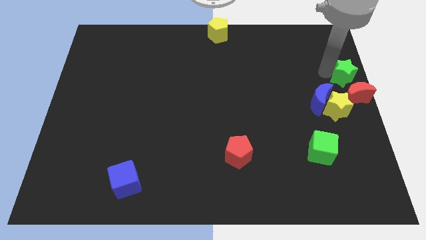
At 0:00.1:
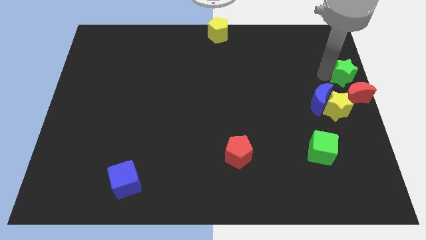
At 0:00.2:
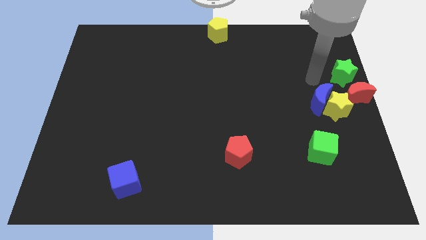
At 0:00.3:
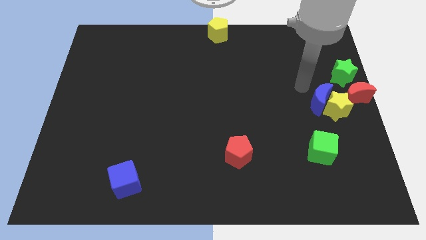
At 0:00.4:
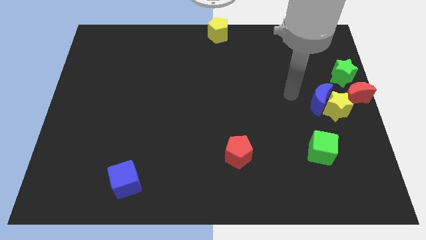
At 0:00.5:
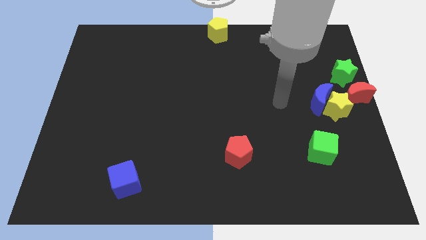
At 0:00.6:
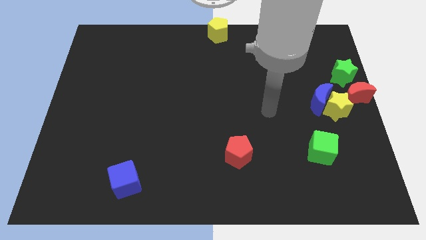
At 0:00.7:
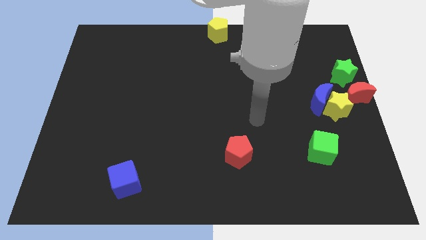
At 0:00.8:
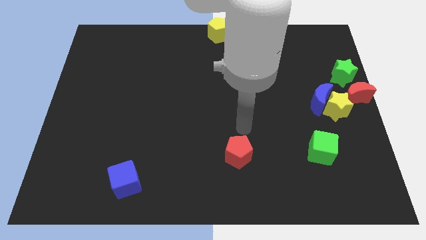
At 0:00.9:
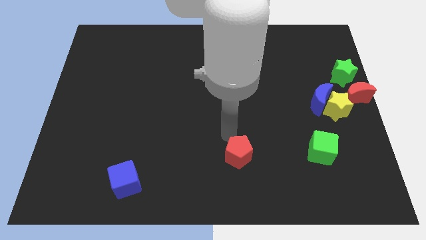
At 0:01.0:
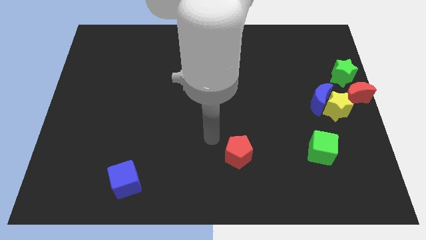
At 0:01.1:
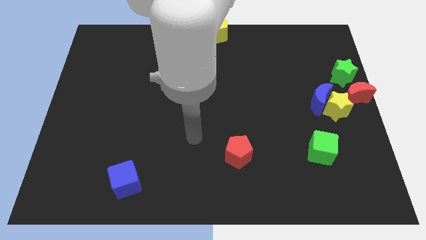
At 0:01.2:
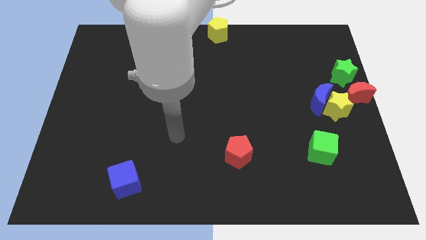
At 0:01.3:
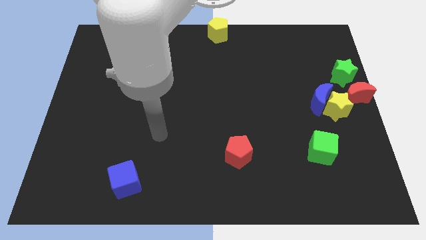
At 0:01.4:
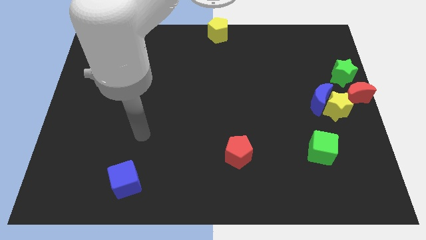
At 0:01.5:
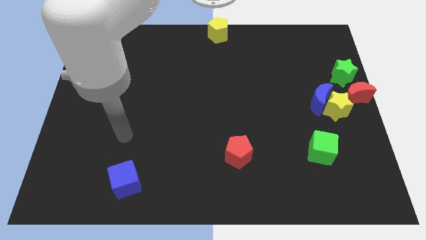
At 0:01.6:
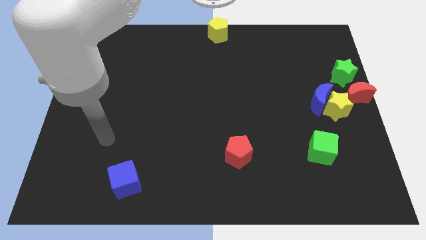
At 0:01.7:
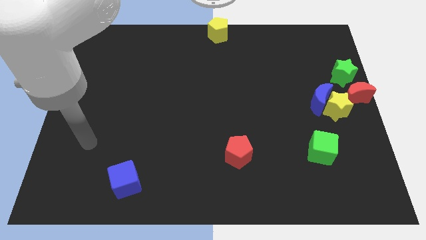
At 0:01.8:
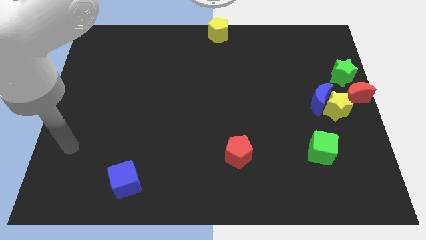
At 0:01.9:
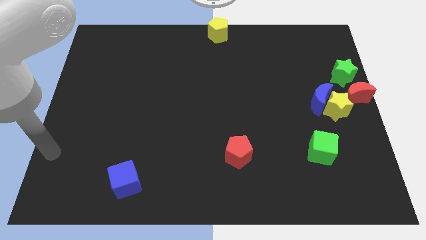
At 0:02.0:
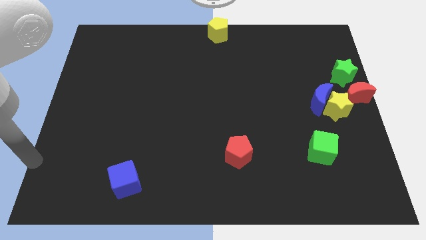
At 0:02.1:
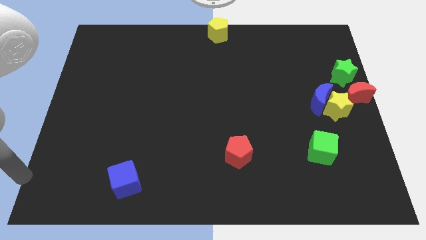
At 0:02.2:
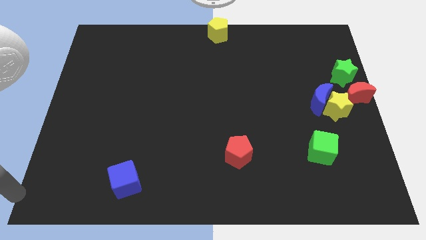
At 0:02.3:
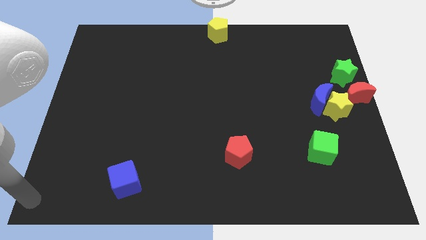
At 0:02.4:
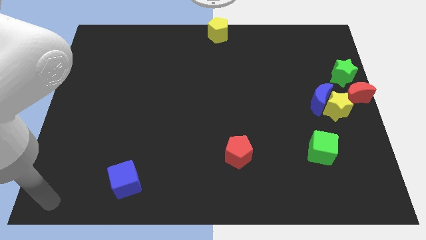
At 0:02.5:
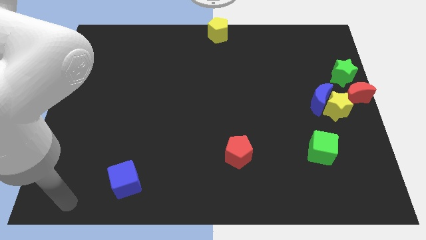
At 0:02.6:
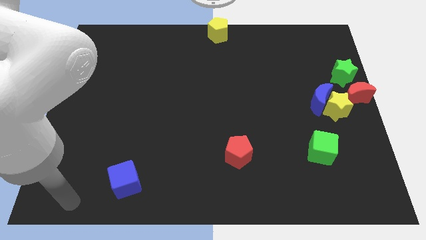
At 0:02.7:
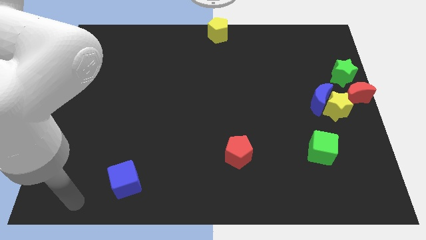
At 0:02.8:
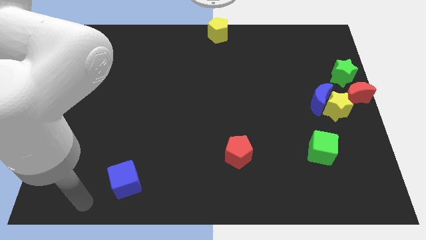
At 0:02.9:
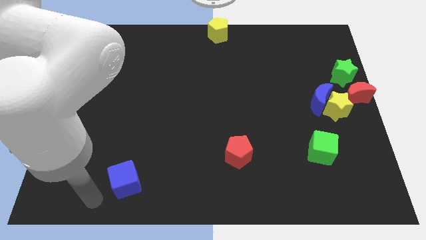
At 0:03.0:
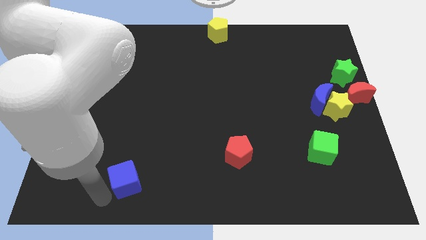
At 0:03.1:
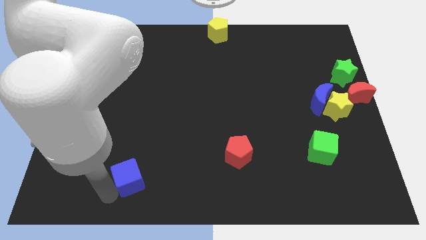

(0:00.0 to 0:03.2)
go near to the left side of the table

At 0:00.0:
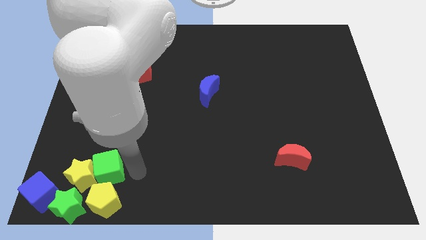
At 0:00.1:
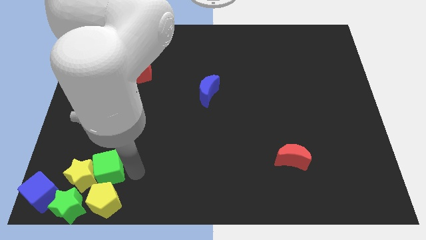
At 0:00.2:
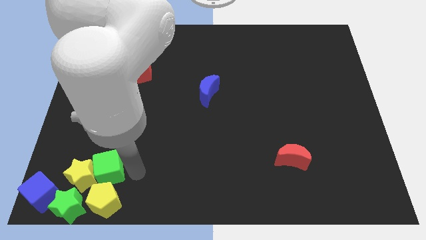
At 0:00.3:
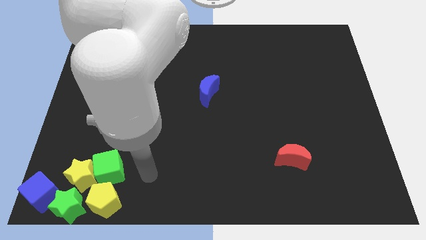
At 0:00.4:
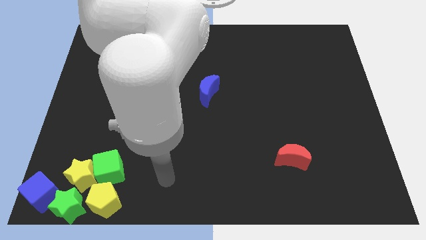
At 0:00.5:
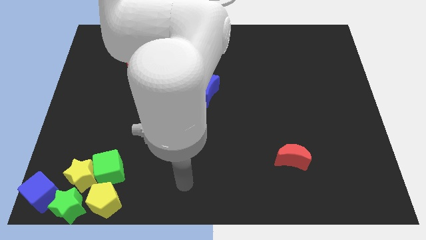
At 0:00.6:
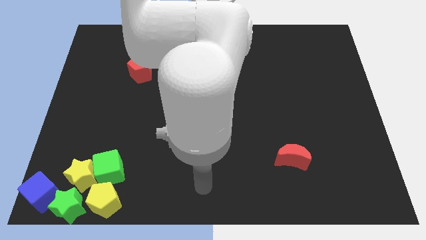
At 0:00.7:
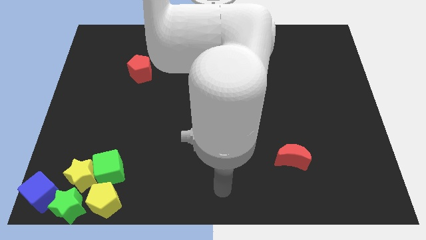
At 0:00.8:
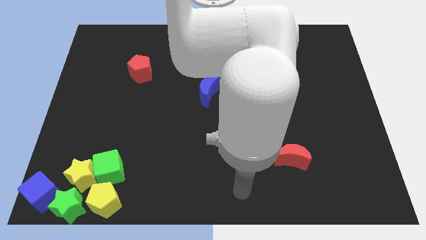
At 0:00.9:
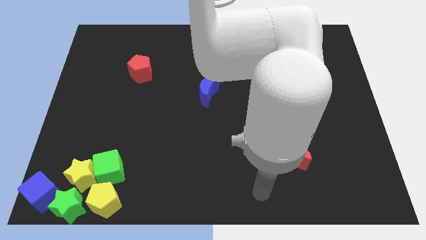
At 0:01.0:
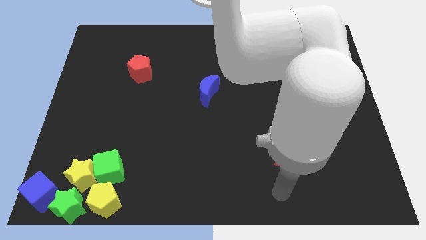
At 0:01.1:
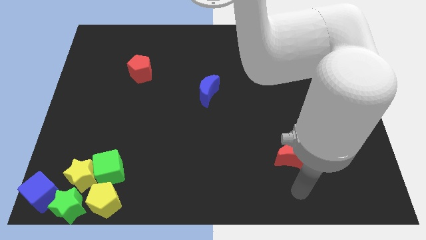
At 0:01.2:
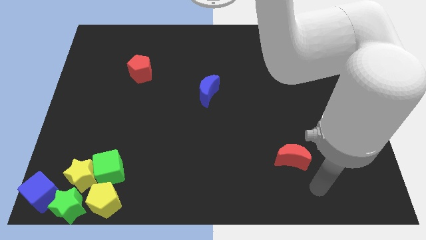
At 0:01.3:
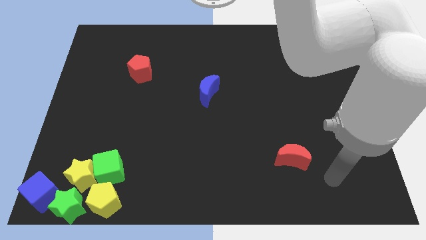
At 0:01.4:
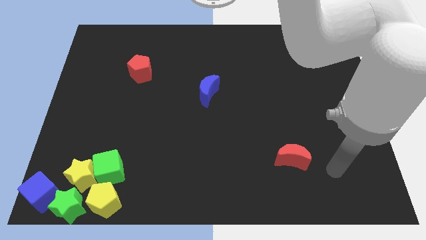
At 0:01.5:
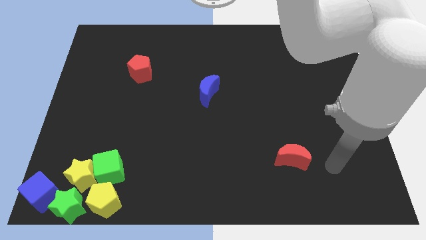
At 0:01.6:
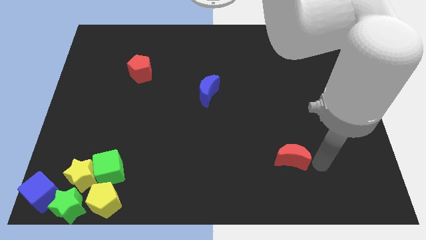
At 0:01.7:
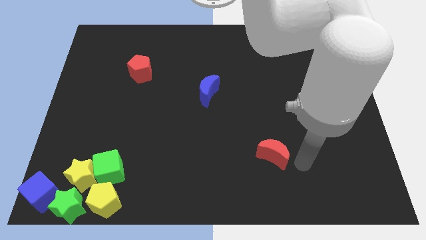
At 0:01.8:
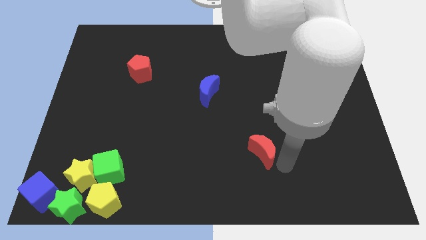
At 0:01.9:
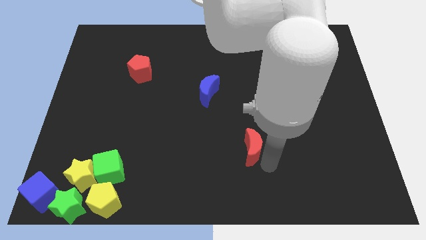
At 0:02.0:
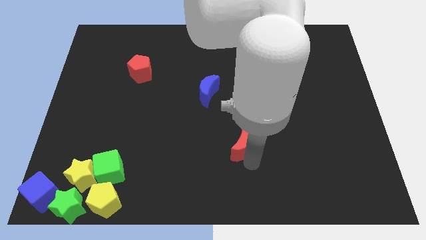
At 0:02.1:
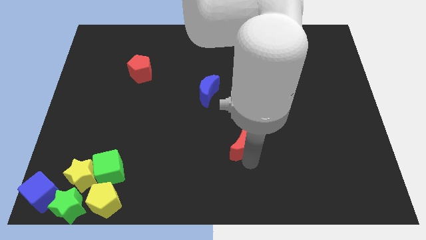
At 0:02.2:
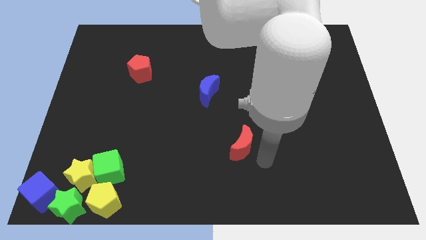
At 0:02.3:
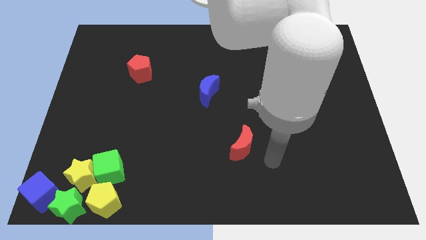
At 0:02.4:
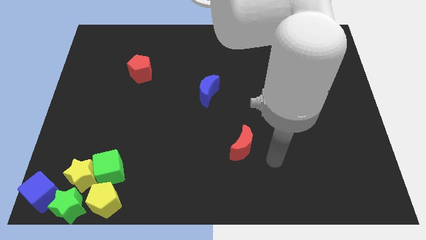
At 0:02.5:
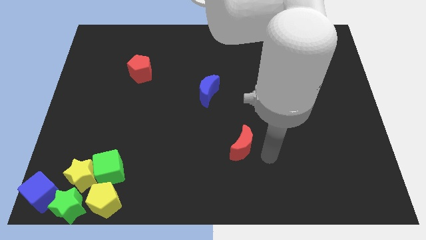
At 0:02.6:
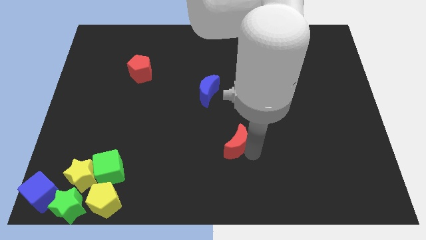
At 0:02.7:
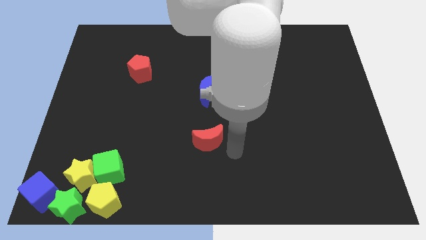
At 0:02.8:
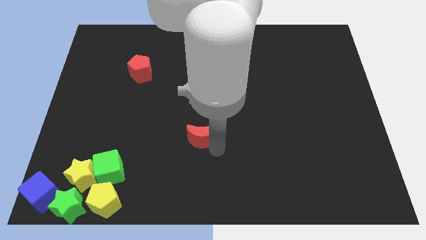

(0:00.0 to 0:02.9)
push the red crescent towards the left

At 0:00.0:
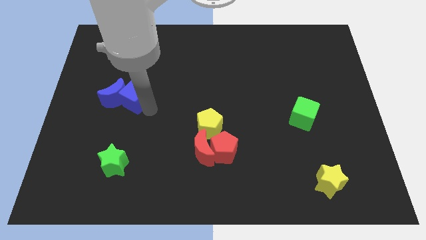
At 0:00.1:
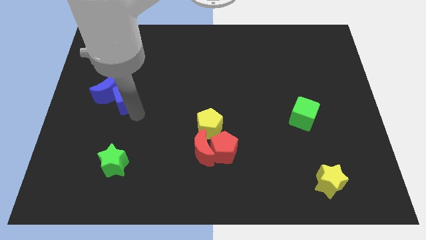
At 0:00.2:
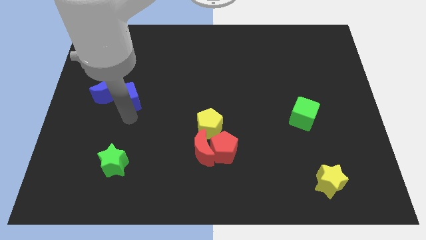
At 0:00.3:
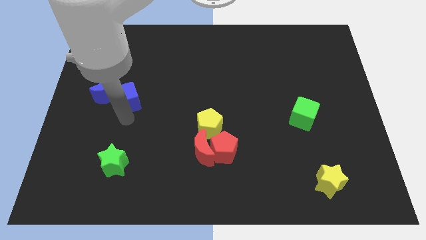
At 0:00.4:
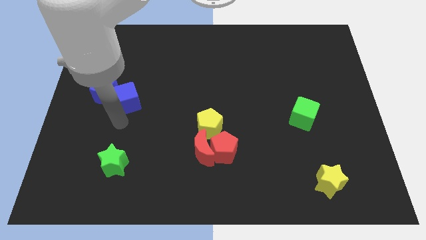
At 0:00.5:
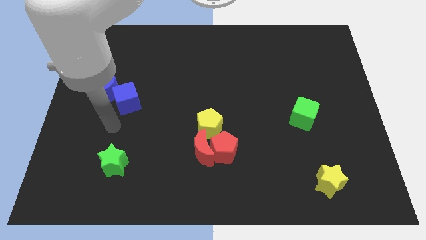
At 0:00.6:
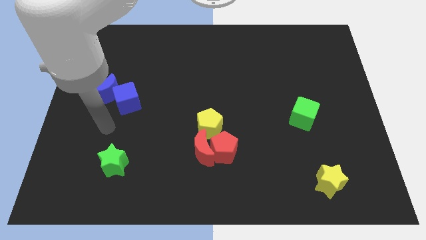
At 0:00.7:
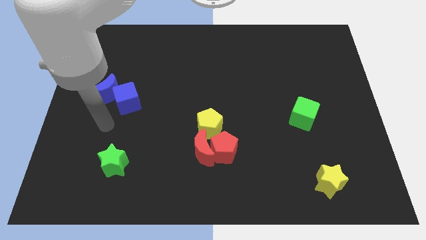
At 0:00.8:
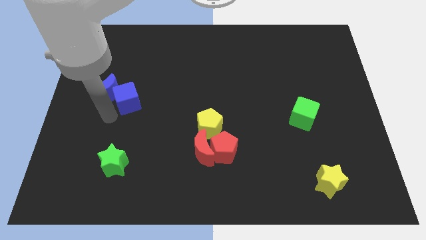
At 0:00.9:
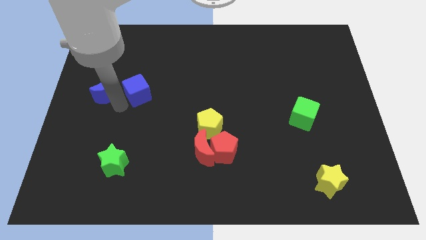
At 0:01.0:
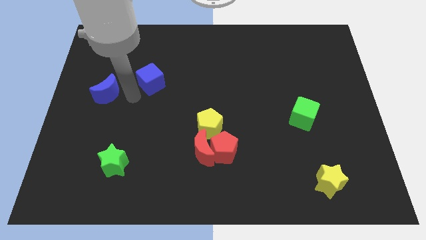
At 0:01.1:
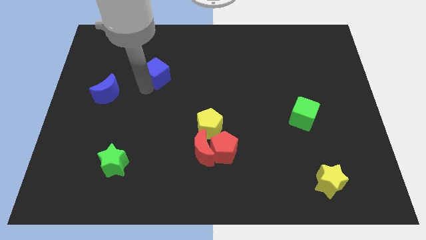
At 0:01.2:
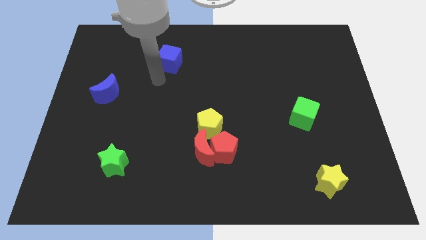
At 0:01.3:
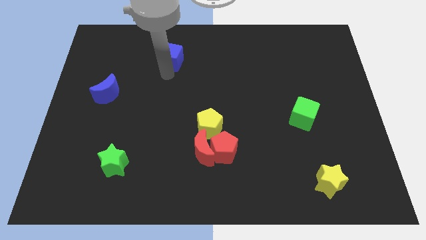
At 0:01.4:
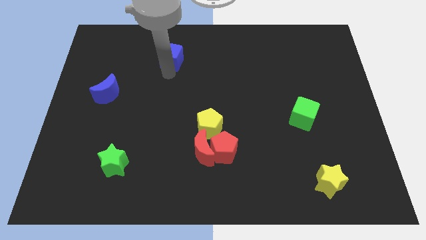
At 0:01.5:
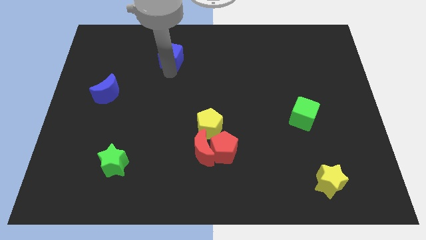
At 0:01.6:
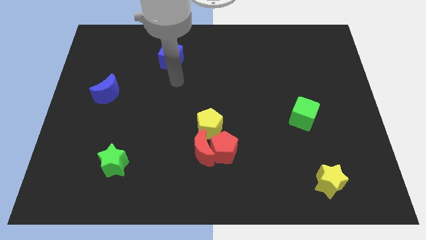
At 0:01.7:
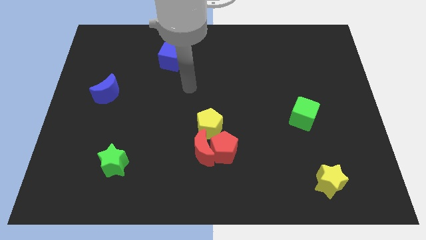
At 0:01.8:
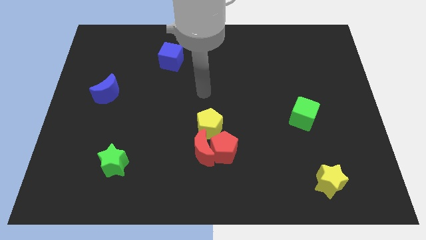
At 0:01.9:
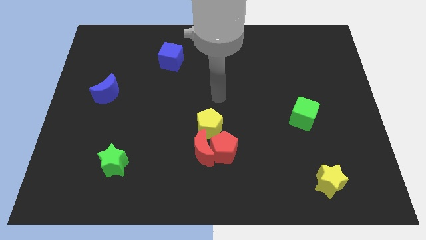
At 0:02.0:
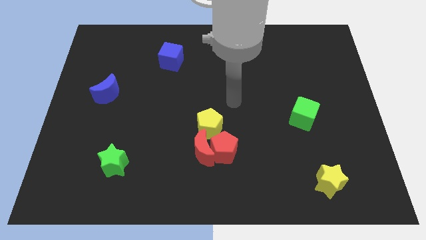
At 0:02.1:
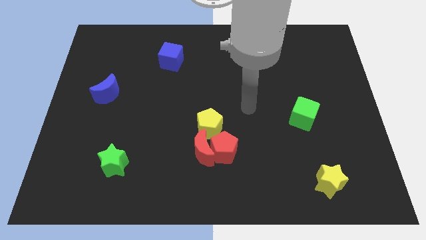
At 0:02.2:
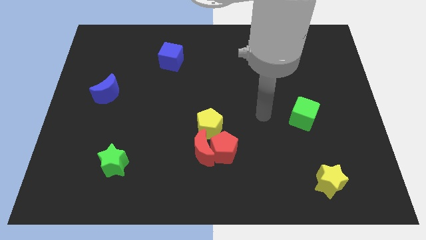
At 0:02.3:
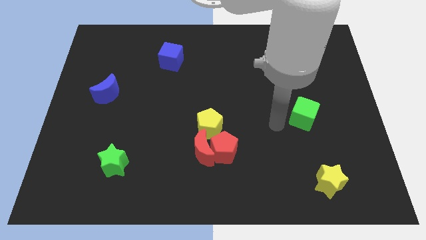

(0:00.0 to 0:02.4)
push blue cube towards the upside of the board

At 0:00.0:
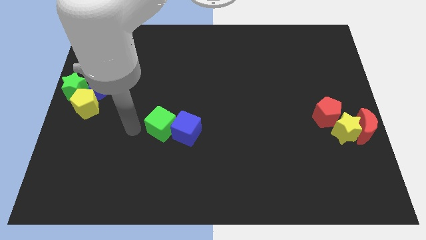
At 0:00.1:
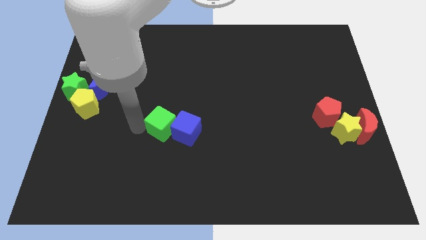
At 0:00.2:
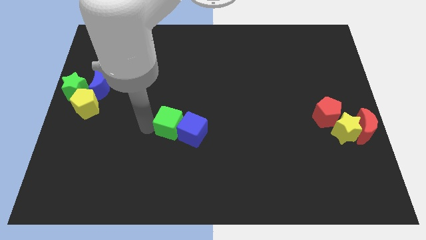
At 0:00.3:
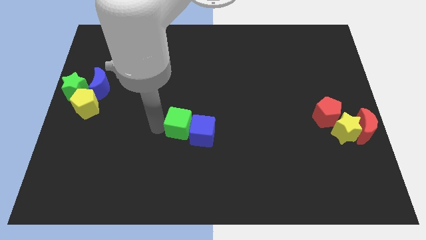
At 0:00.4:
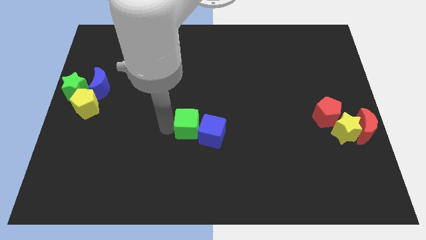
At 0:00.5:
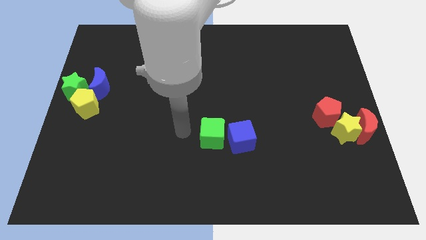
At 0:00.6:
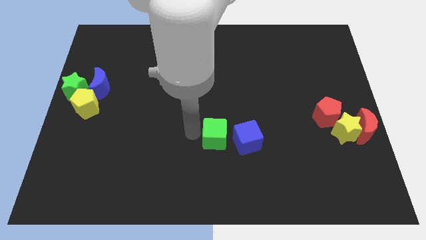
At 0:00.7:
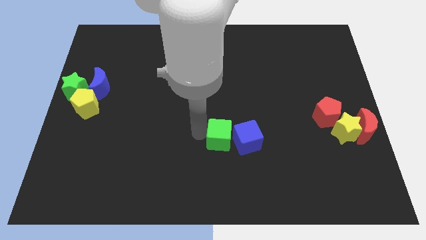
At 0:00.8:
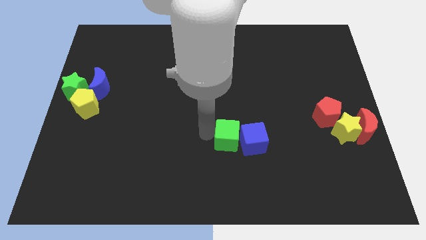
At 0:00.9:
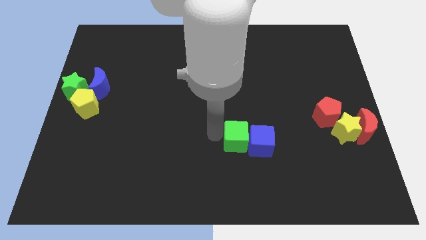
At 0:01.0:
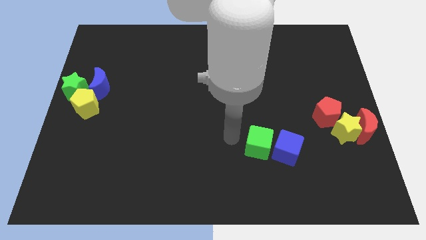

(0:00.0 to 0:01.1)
move the green cube to the left of the blue cube
